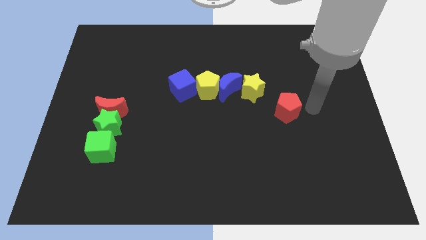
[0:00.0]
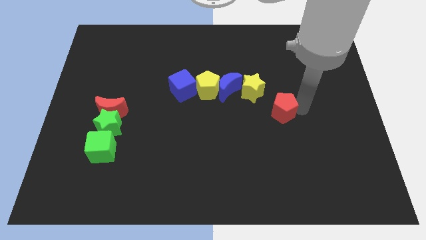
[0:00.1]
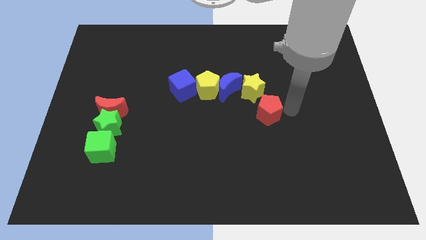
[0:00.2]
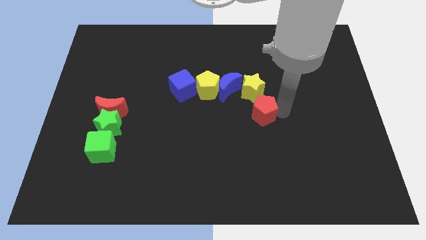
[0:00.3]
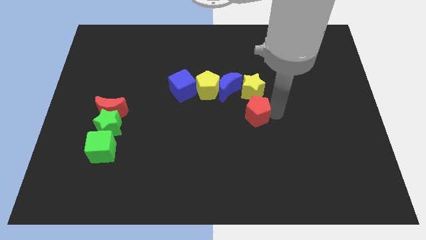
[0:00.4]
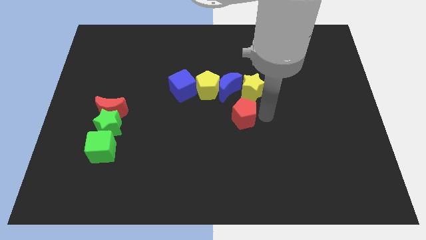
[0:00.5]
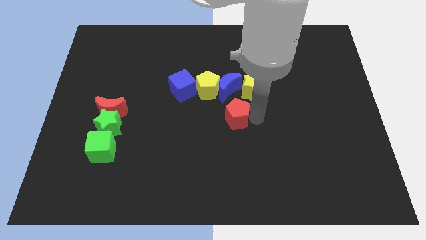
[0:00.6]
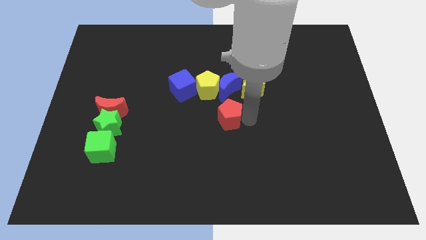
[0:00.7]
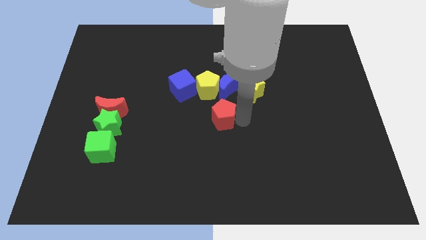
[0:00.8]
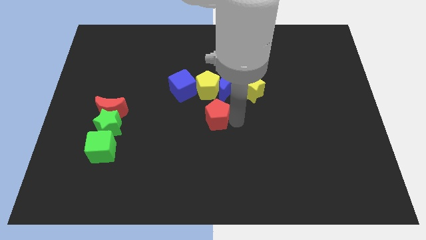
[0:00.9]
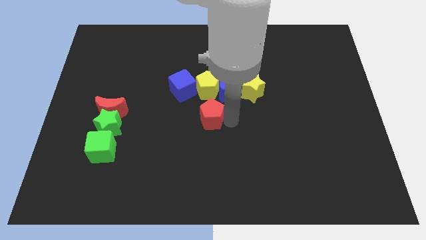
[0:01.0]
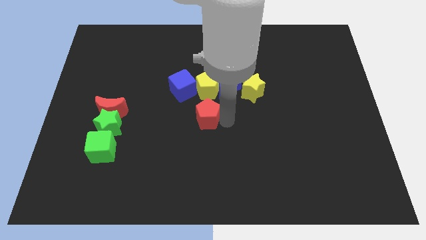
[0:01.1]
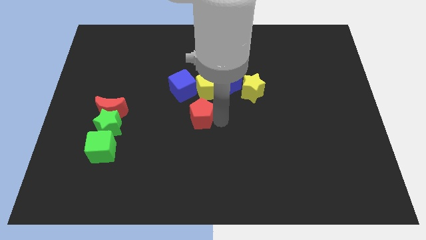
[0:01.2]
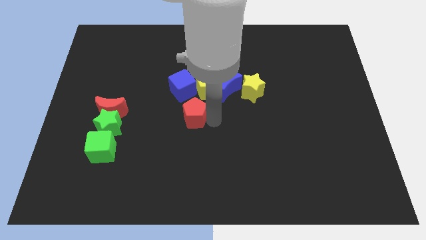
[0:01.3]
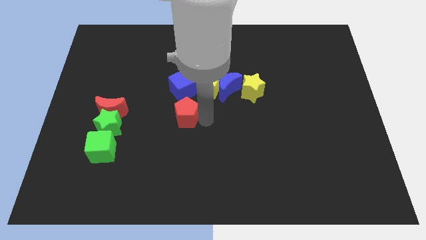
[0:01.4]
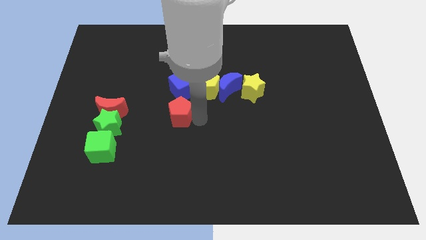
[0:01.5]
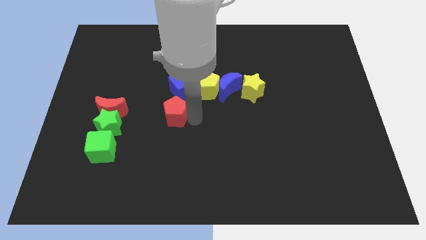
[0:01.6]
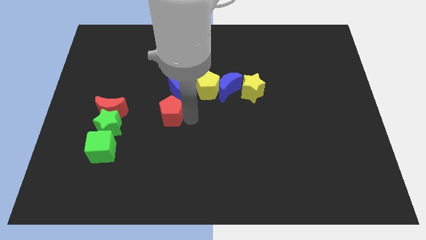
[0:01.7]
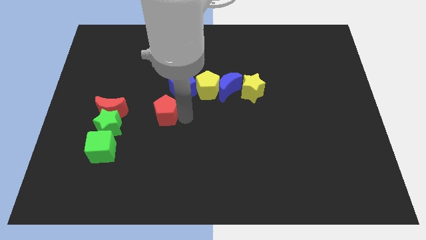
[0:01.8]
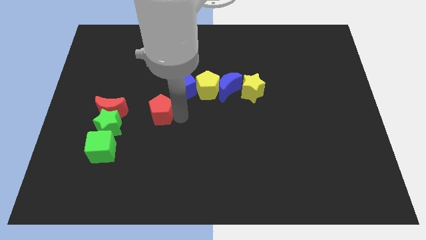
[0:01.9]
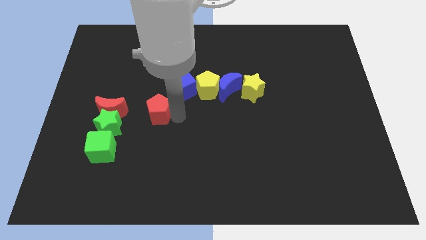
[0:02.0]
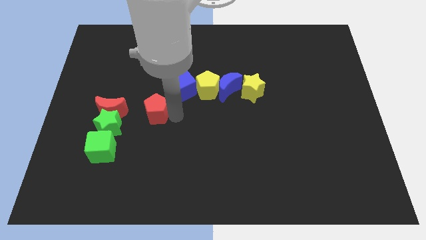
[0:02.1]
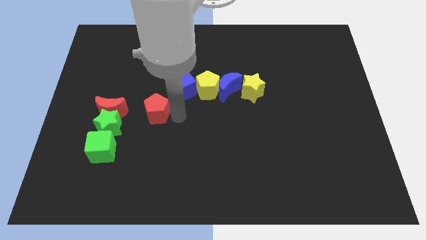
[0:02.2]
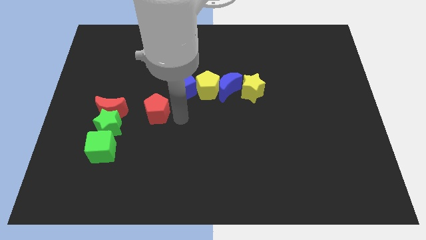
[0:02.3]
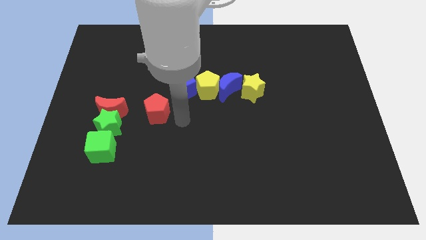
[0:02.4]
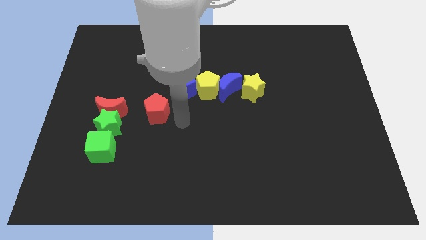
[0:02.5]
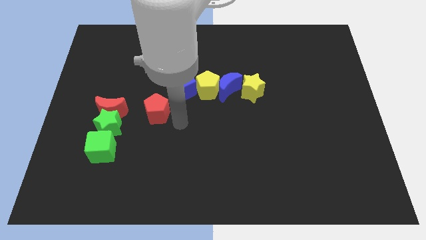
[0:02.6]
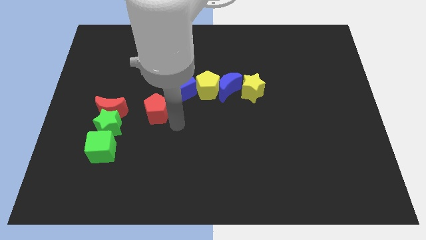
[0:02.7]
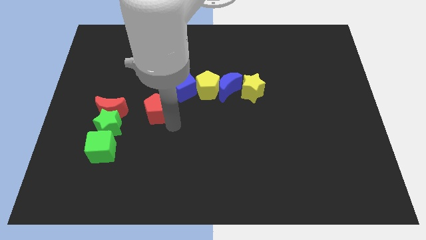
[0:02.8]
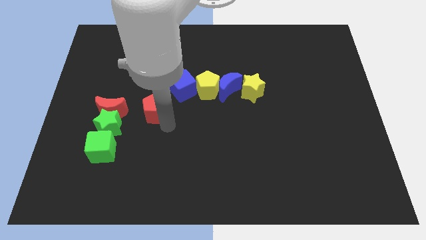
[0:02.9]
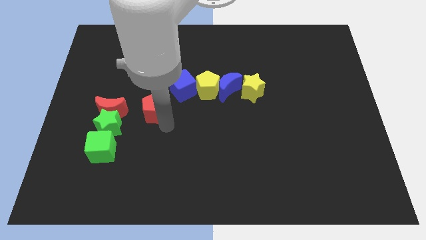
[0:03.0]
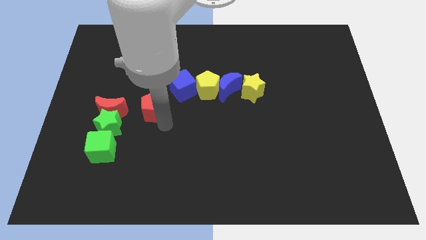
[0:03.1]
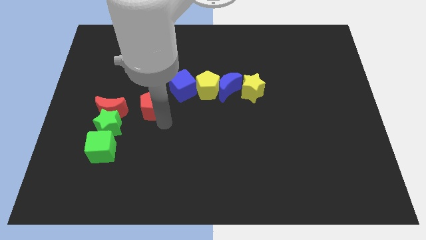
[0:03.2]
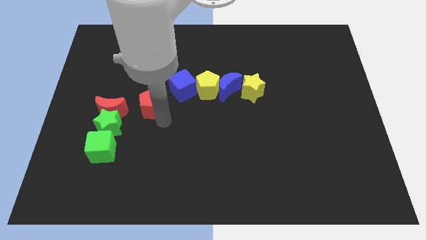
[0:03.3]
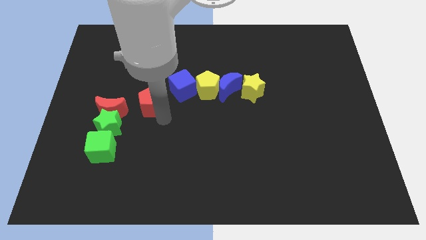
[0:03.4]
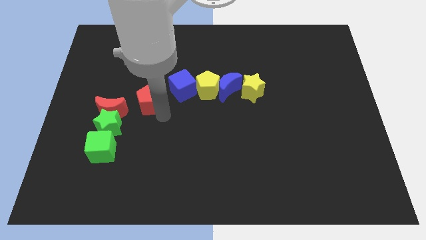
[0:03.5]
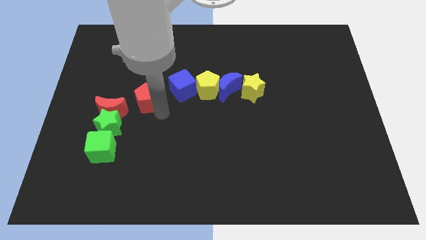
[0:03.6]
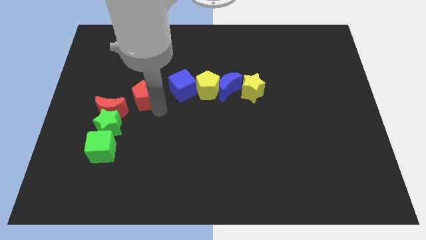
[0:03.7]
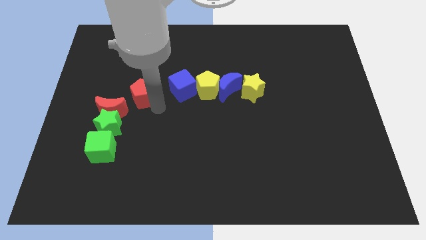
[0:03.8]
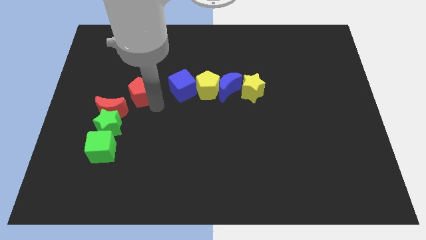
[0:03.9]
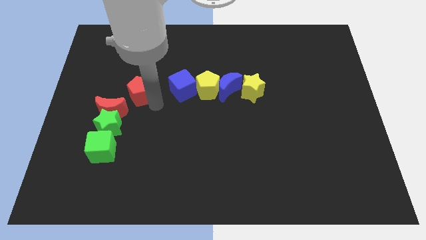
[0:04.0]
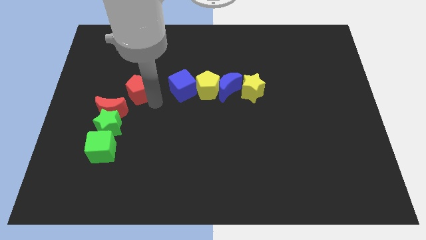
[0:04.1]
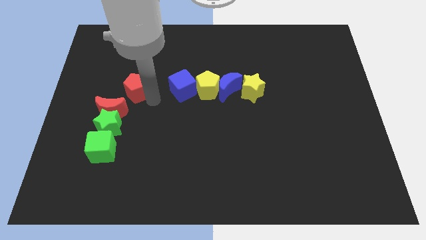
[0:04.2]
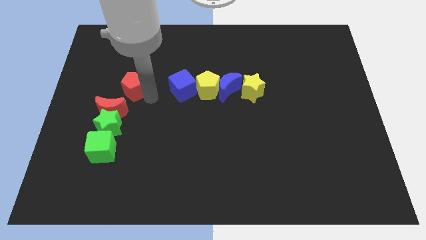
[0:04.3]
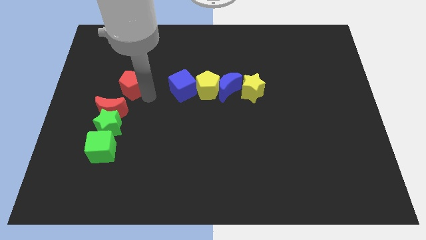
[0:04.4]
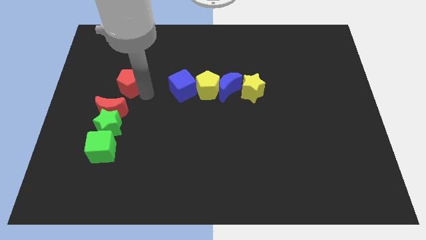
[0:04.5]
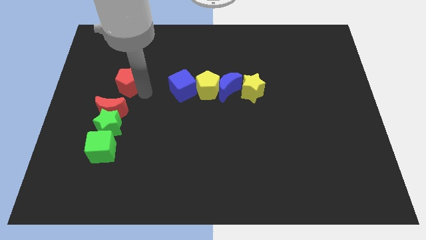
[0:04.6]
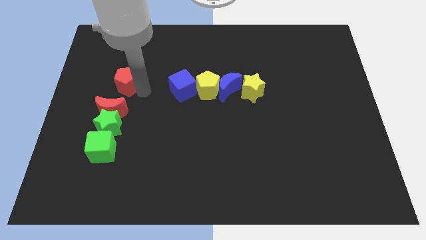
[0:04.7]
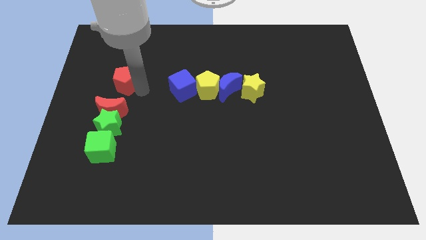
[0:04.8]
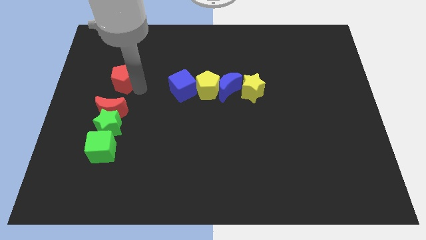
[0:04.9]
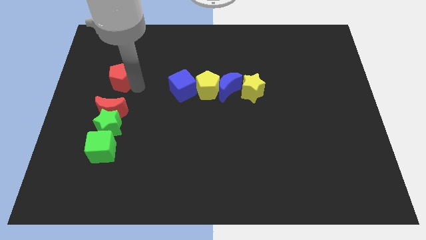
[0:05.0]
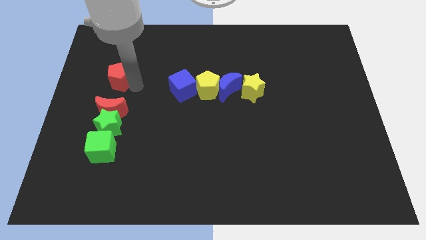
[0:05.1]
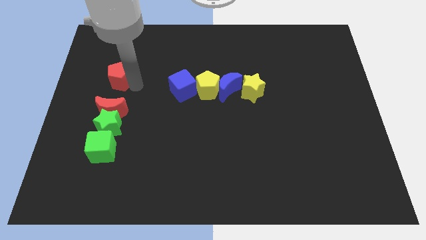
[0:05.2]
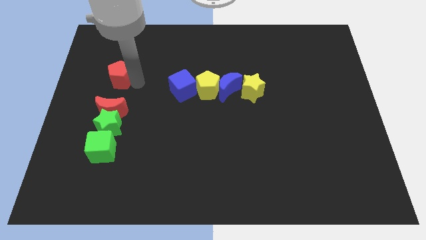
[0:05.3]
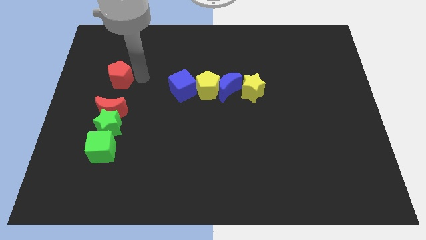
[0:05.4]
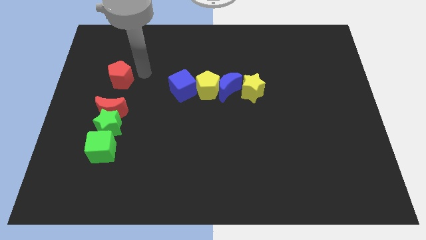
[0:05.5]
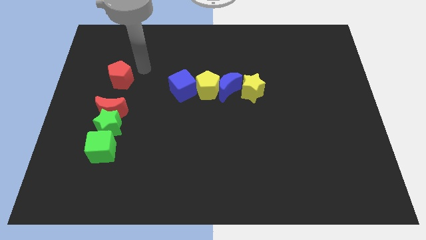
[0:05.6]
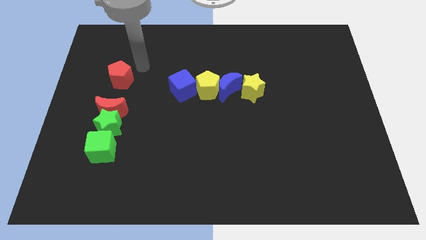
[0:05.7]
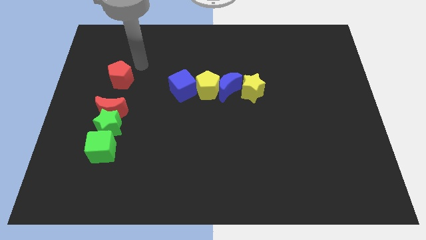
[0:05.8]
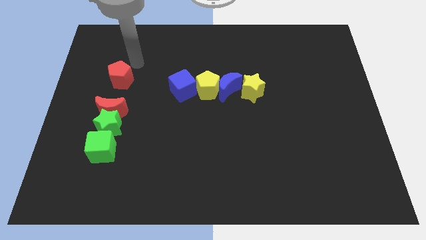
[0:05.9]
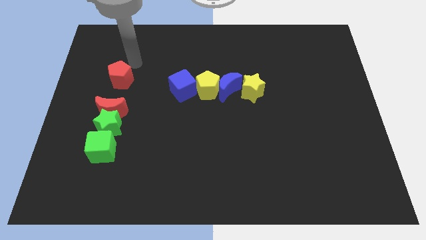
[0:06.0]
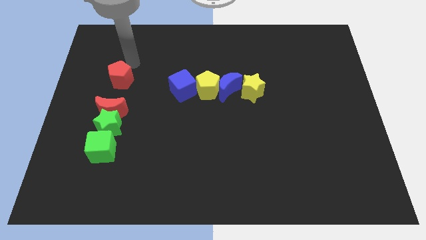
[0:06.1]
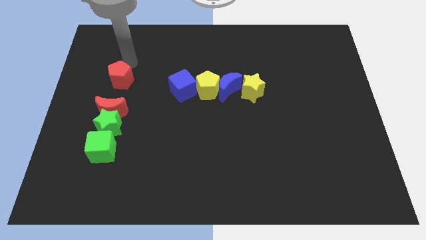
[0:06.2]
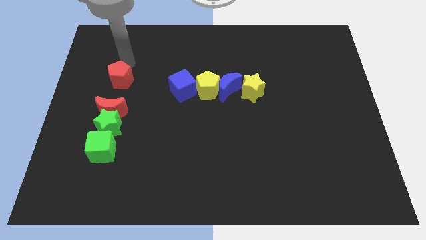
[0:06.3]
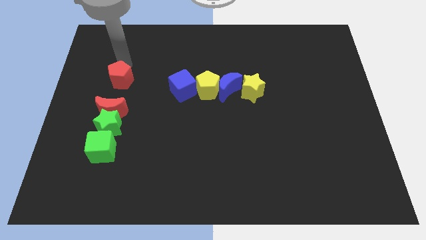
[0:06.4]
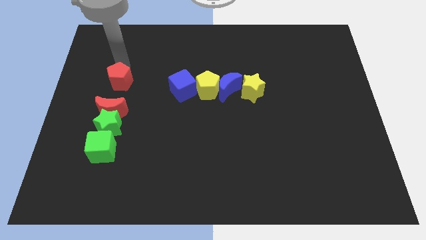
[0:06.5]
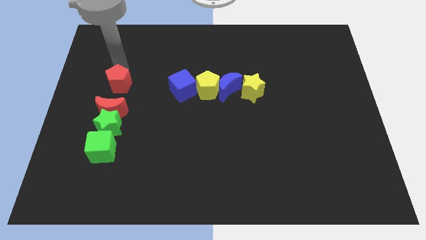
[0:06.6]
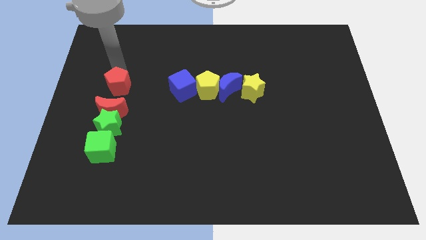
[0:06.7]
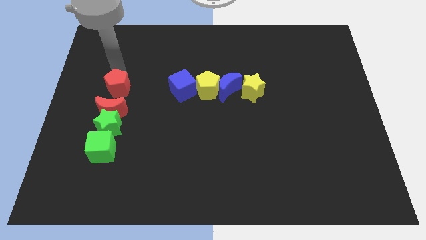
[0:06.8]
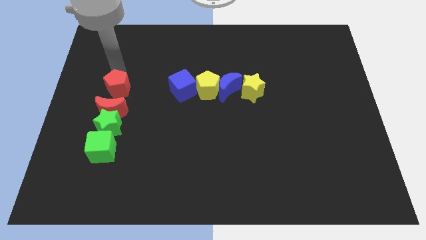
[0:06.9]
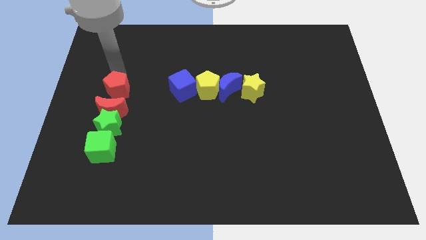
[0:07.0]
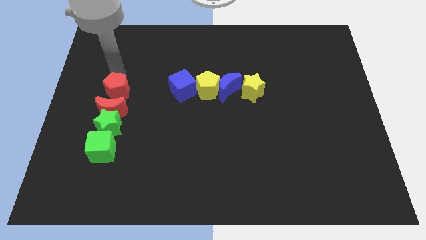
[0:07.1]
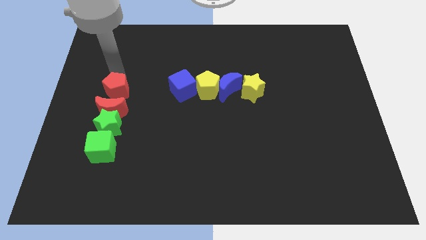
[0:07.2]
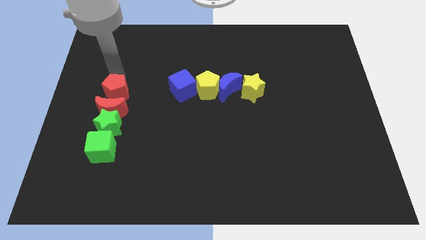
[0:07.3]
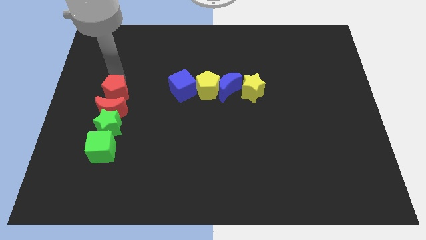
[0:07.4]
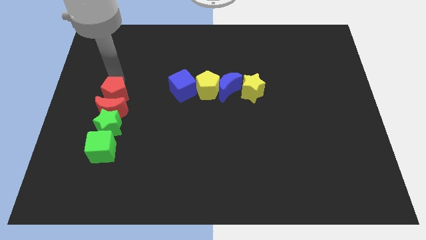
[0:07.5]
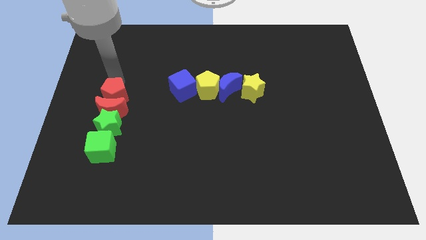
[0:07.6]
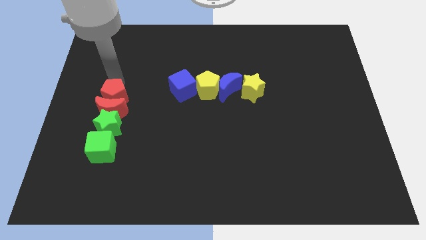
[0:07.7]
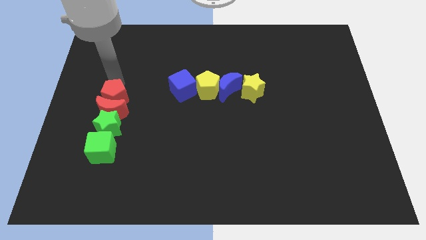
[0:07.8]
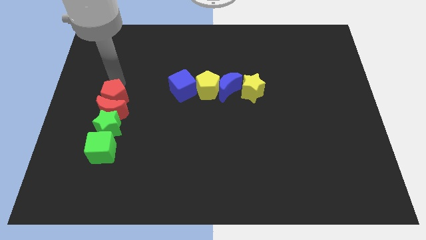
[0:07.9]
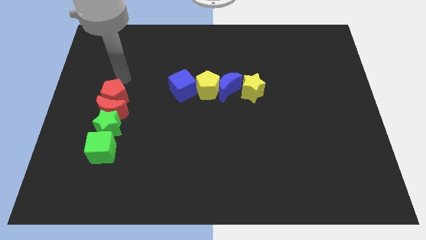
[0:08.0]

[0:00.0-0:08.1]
move the red pentagon above to the red crescent

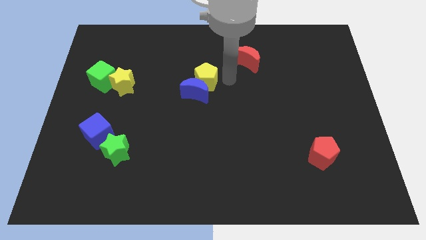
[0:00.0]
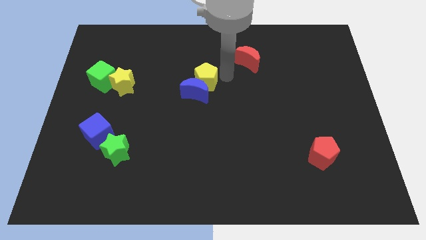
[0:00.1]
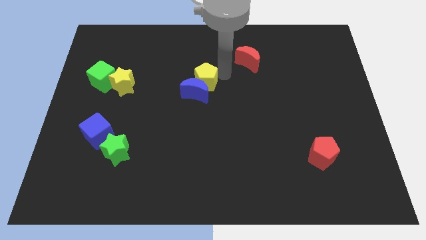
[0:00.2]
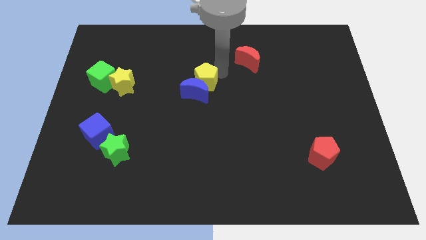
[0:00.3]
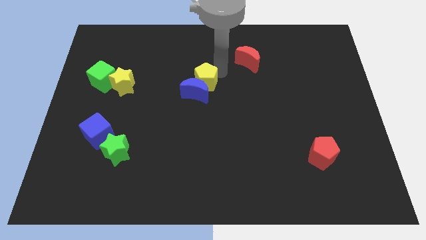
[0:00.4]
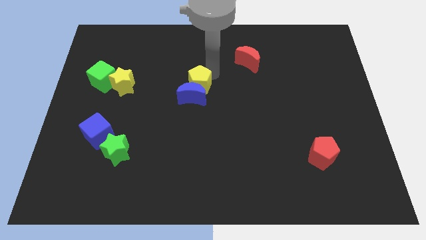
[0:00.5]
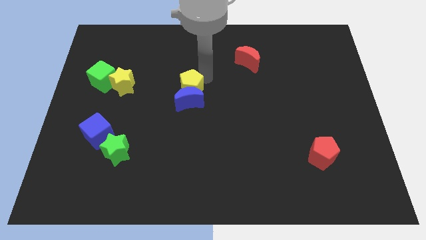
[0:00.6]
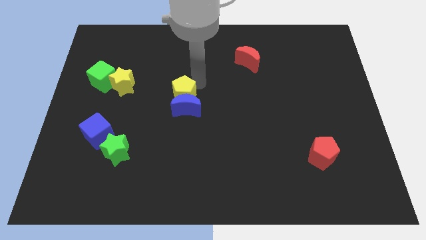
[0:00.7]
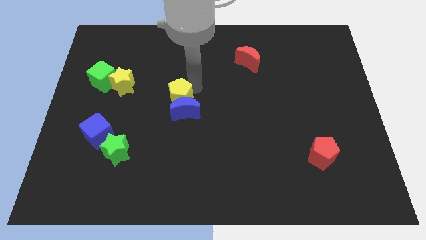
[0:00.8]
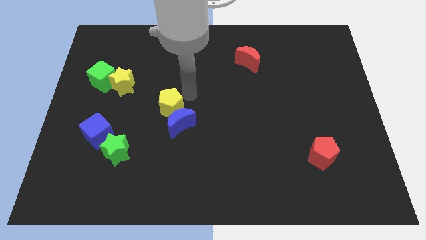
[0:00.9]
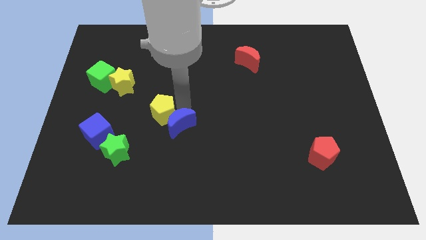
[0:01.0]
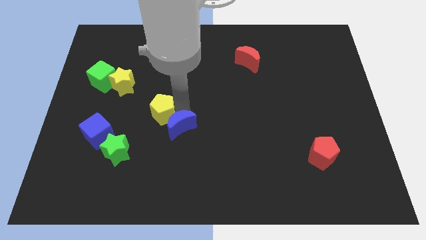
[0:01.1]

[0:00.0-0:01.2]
push the yellow pentagon along with blue crescent slightly to the bottom
